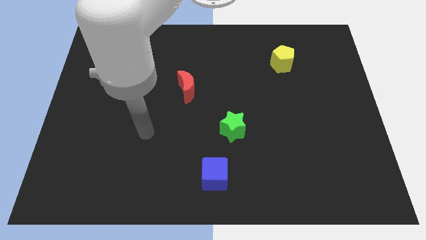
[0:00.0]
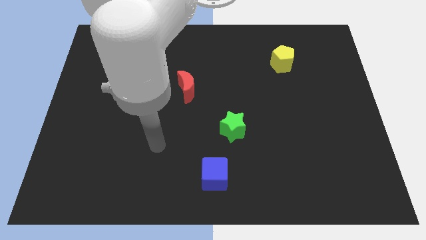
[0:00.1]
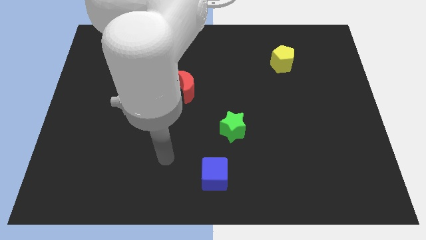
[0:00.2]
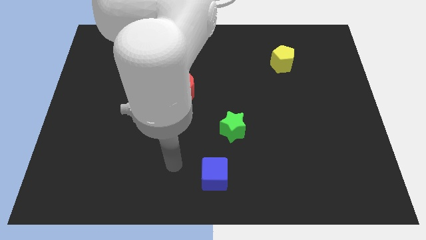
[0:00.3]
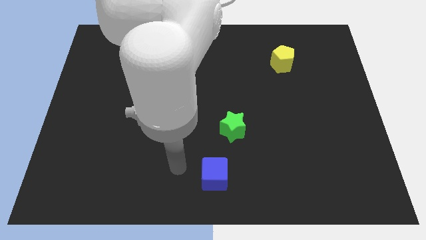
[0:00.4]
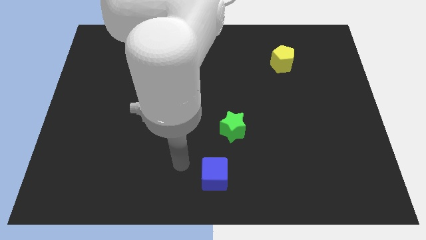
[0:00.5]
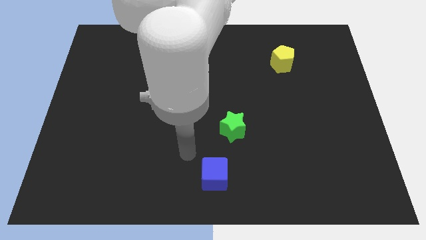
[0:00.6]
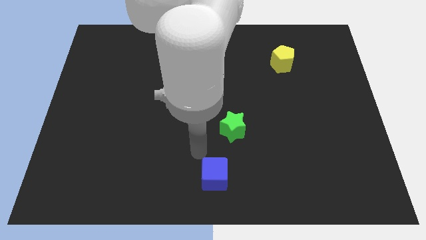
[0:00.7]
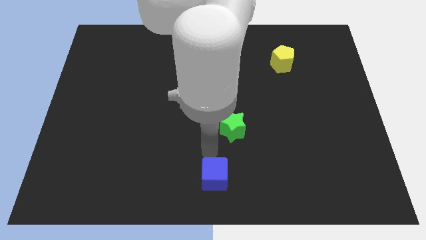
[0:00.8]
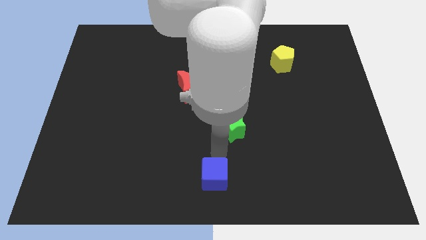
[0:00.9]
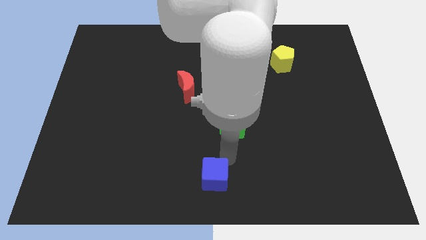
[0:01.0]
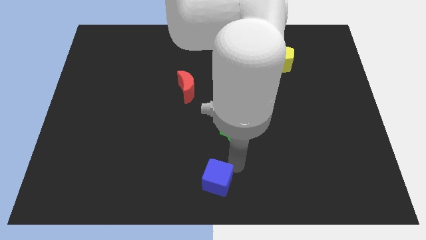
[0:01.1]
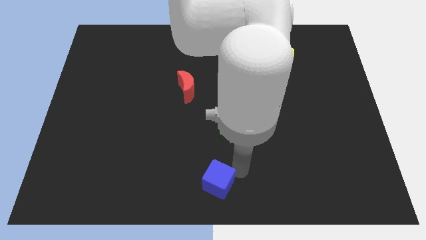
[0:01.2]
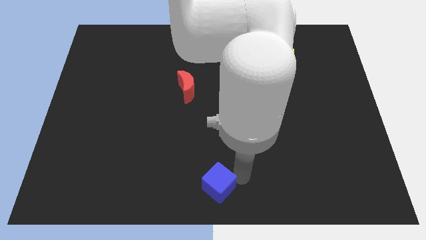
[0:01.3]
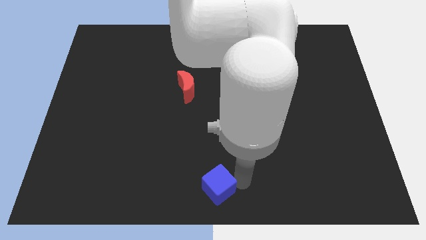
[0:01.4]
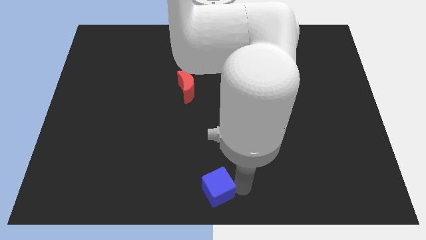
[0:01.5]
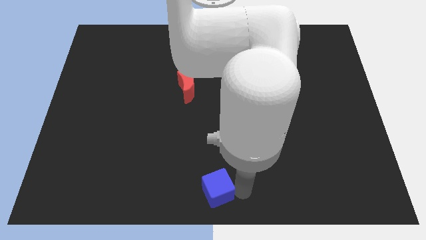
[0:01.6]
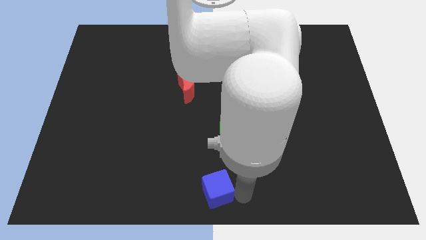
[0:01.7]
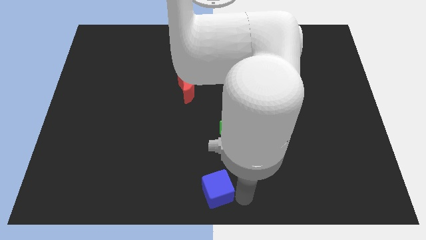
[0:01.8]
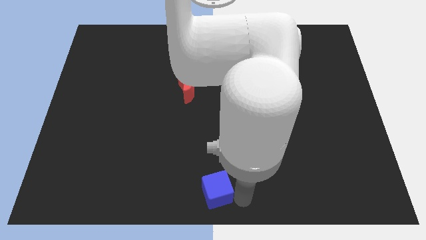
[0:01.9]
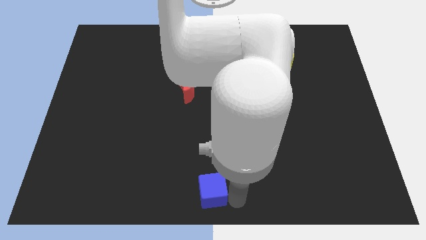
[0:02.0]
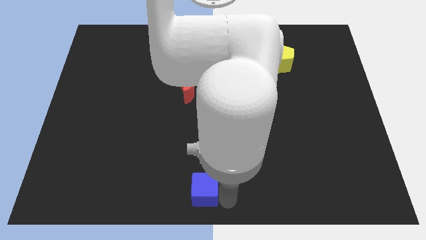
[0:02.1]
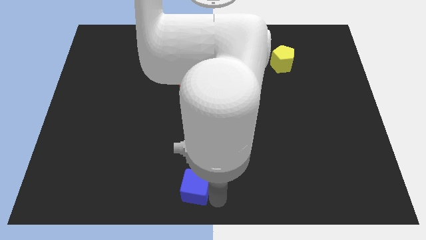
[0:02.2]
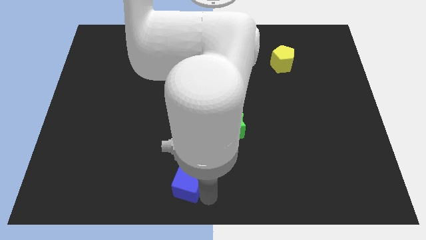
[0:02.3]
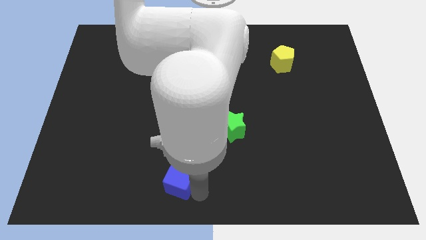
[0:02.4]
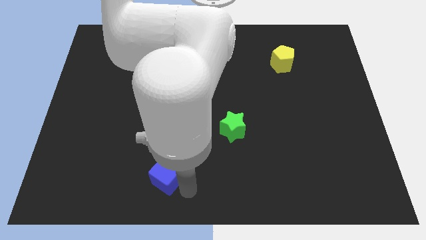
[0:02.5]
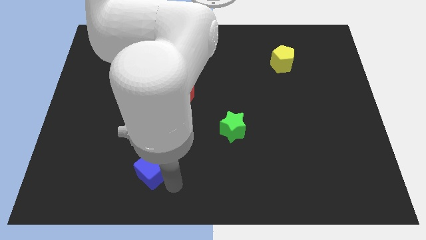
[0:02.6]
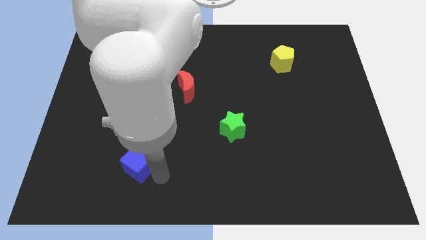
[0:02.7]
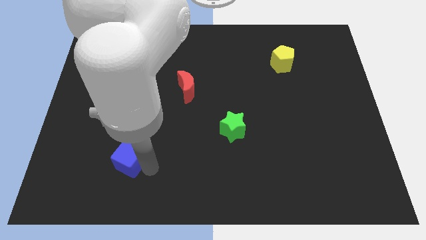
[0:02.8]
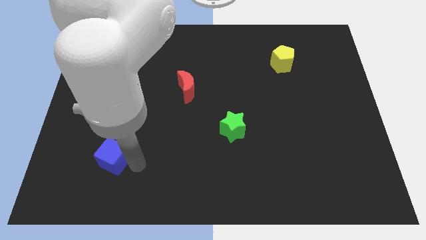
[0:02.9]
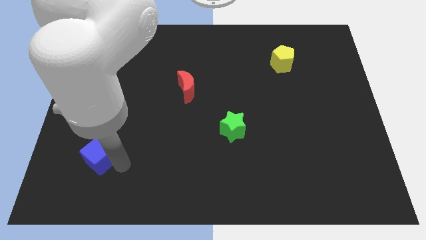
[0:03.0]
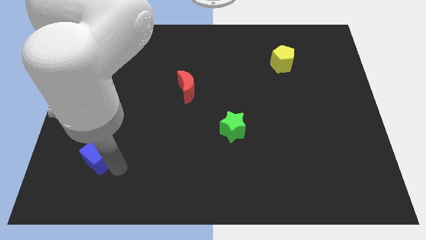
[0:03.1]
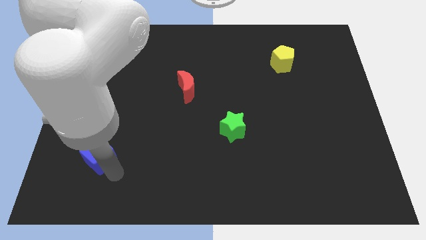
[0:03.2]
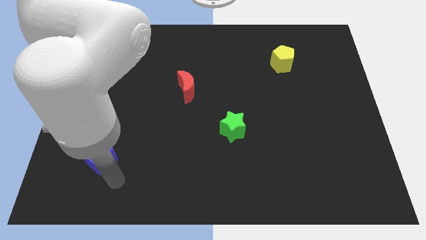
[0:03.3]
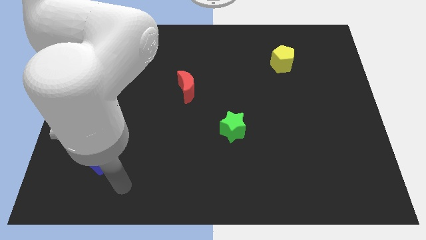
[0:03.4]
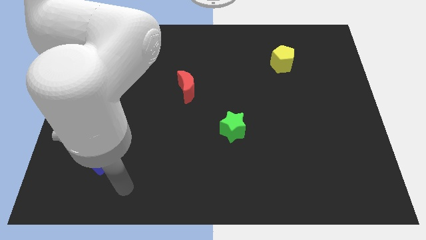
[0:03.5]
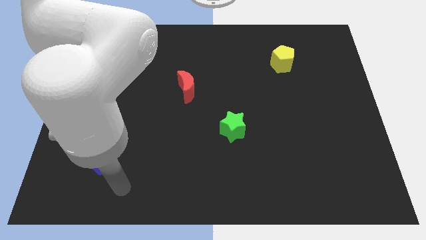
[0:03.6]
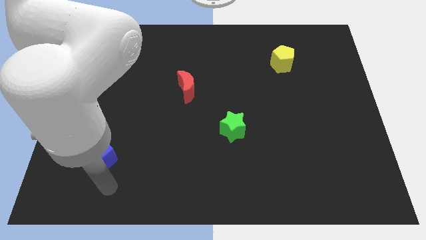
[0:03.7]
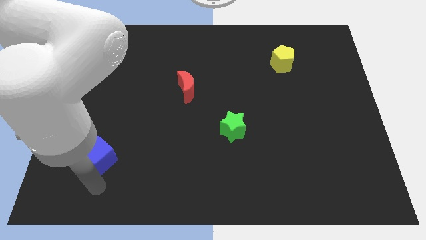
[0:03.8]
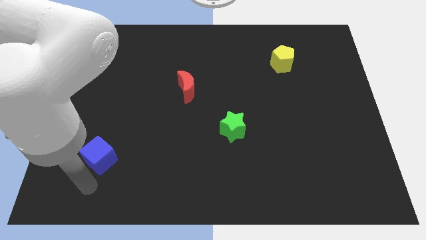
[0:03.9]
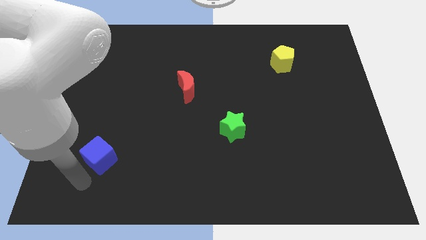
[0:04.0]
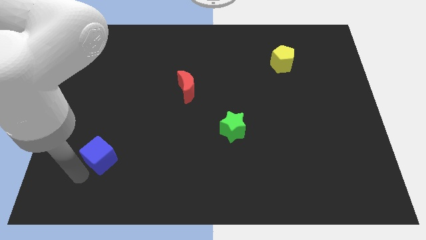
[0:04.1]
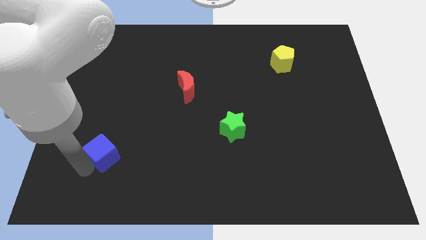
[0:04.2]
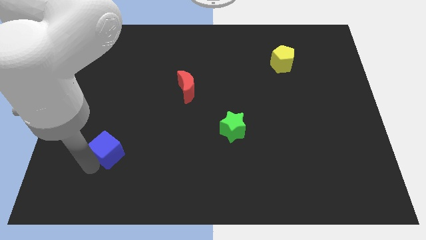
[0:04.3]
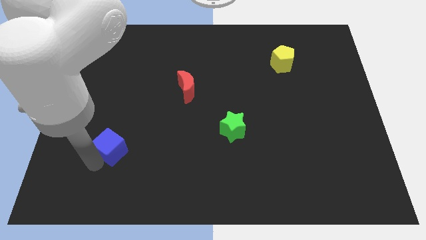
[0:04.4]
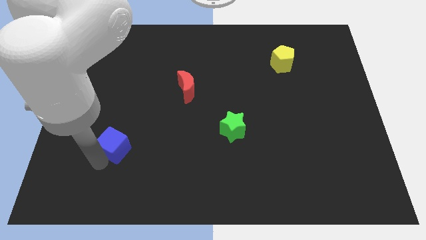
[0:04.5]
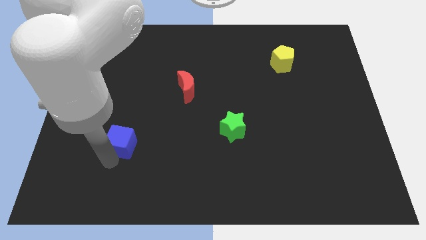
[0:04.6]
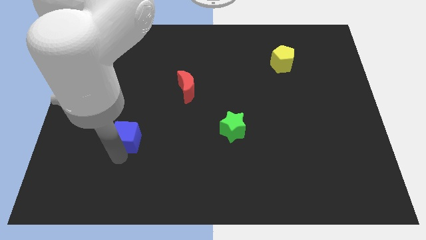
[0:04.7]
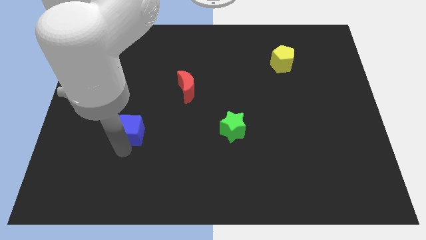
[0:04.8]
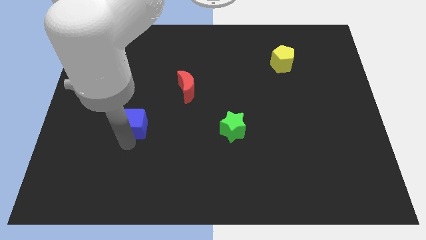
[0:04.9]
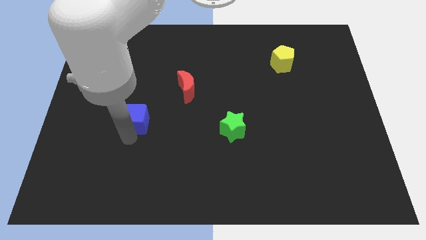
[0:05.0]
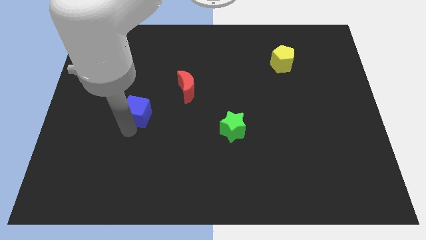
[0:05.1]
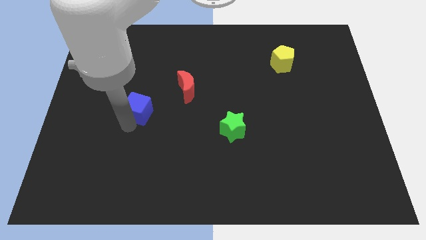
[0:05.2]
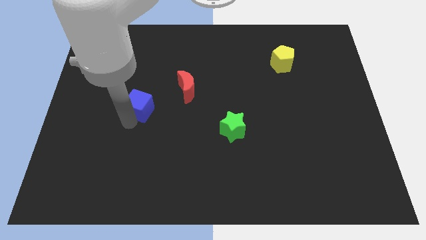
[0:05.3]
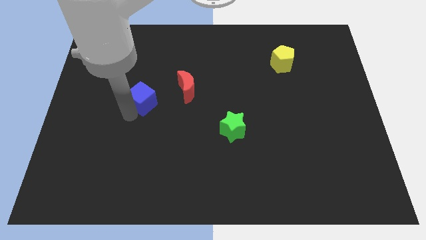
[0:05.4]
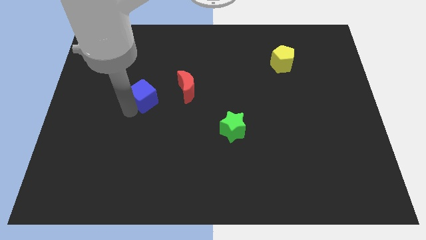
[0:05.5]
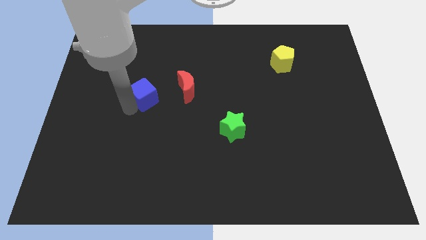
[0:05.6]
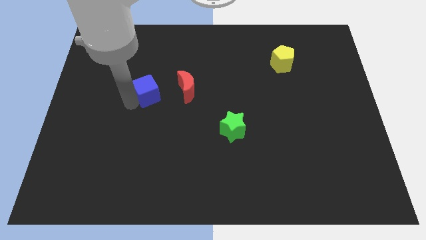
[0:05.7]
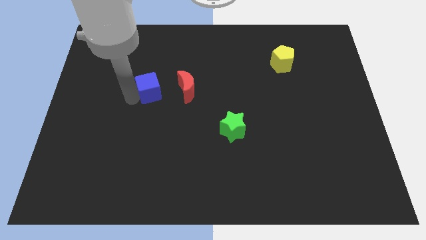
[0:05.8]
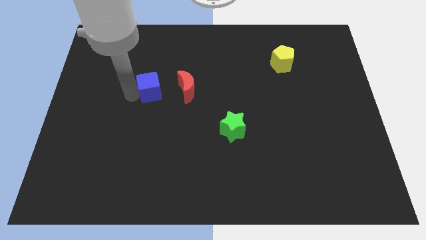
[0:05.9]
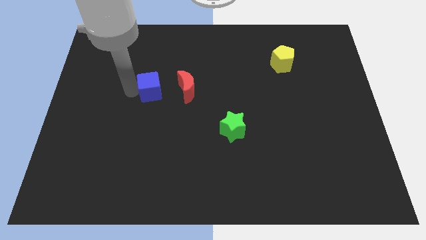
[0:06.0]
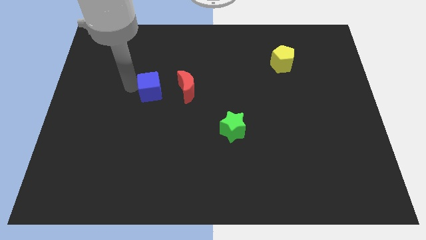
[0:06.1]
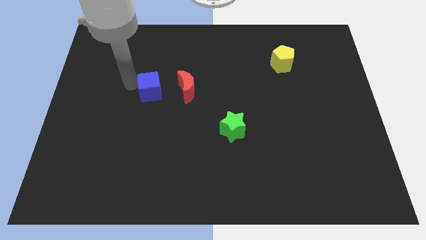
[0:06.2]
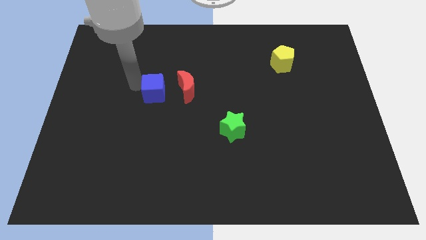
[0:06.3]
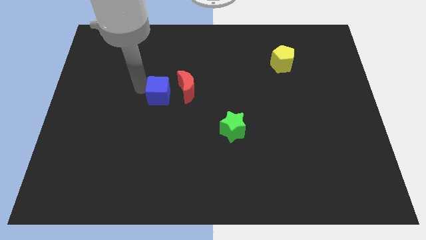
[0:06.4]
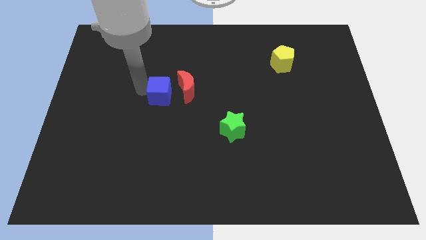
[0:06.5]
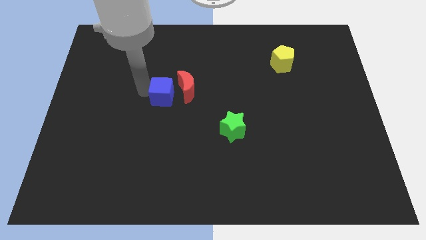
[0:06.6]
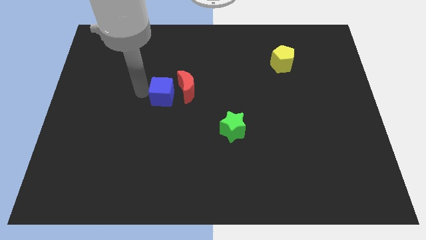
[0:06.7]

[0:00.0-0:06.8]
move the blue block towards the red block

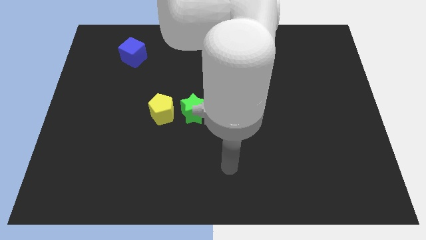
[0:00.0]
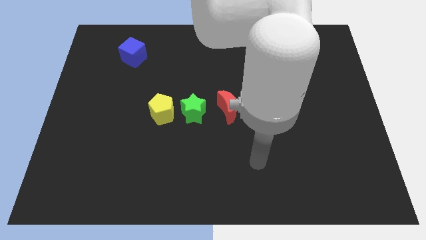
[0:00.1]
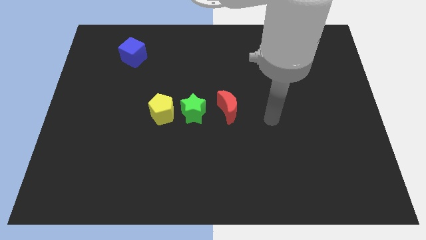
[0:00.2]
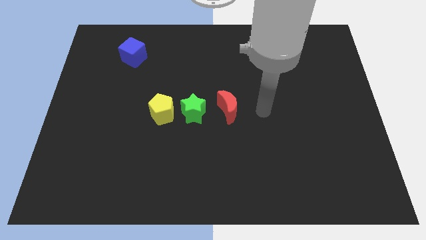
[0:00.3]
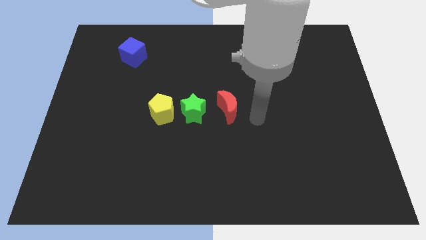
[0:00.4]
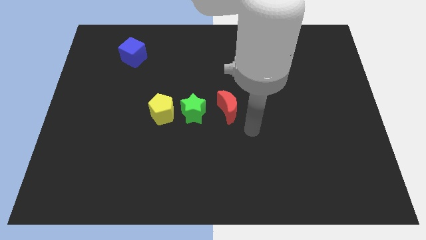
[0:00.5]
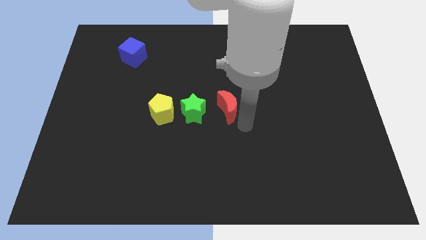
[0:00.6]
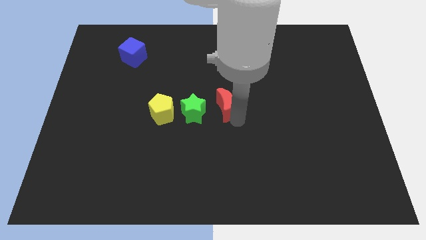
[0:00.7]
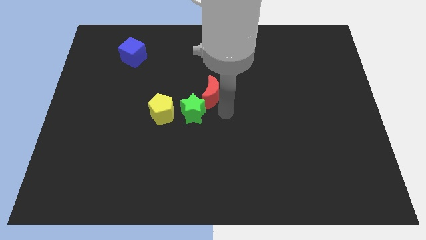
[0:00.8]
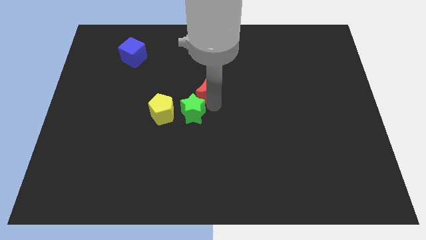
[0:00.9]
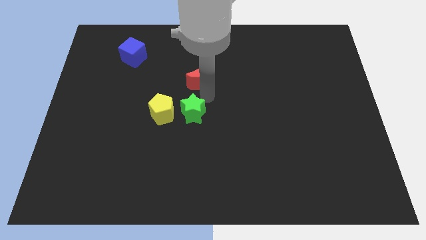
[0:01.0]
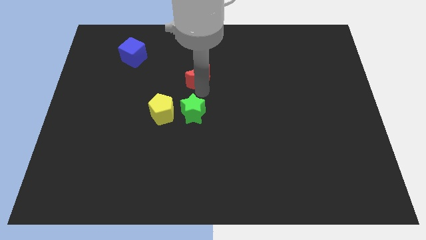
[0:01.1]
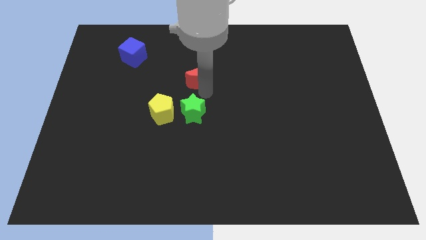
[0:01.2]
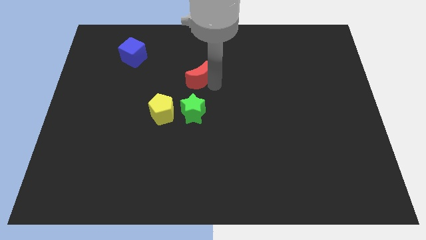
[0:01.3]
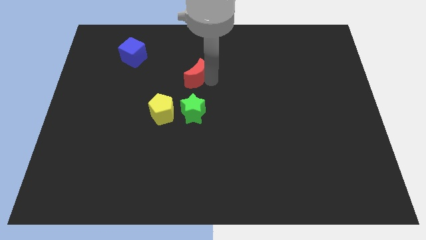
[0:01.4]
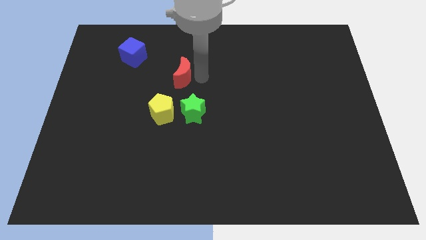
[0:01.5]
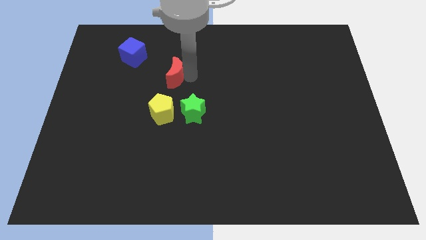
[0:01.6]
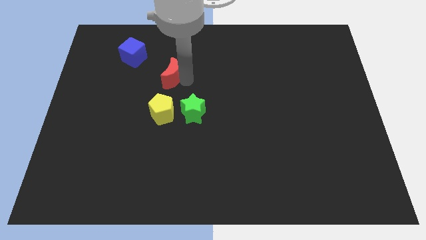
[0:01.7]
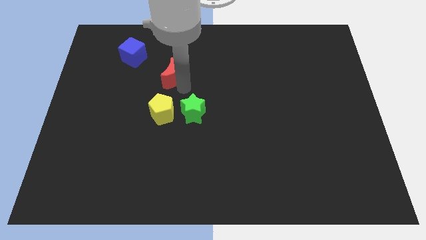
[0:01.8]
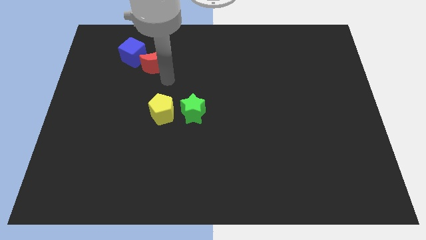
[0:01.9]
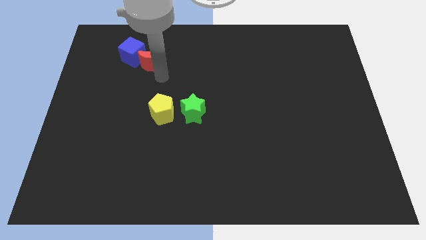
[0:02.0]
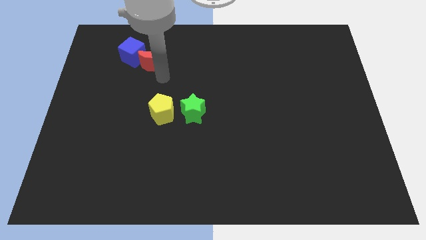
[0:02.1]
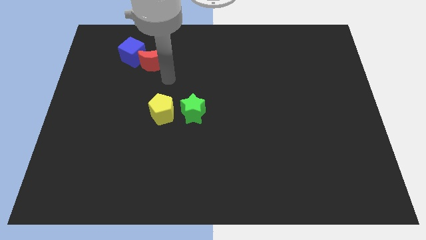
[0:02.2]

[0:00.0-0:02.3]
move the red block towards the cube
